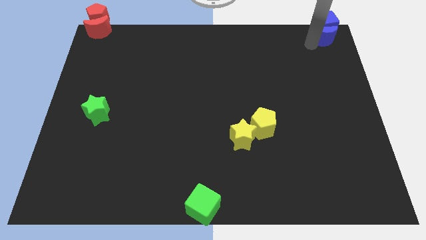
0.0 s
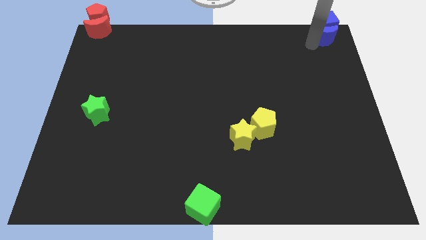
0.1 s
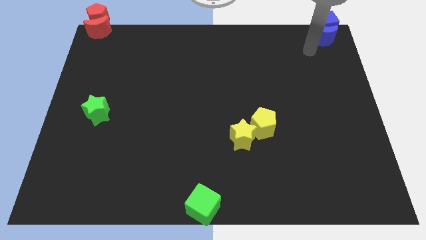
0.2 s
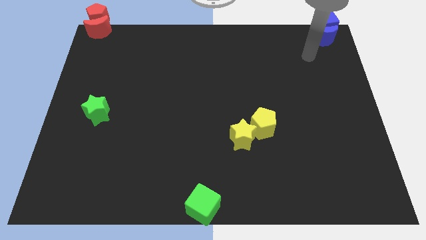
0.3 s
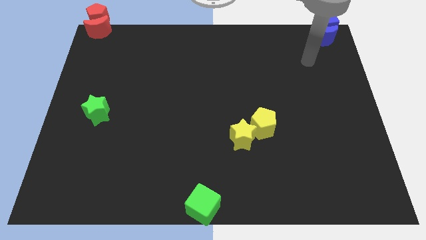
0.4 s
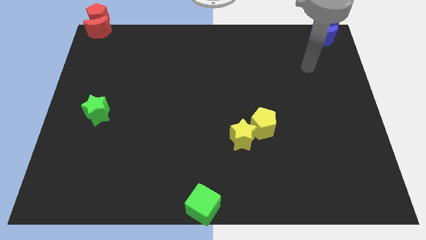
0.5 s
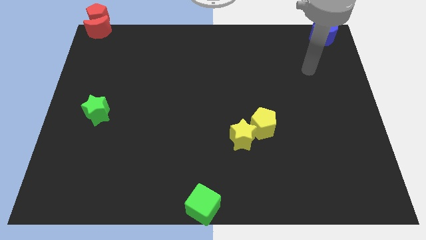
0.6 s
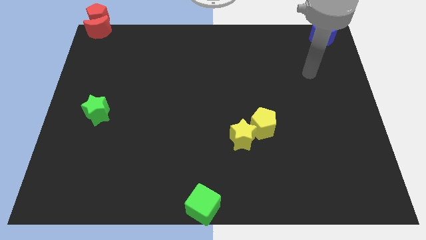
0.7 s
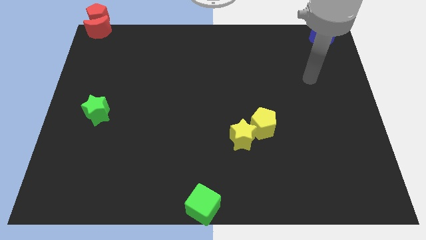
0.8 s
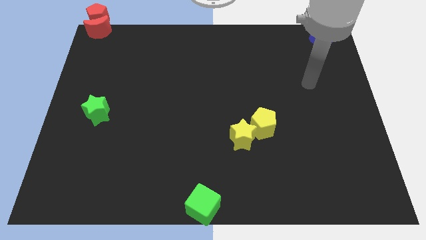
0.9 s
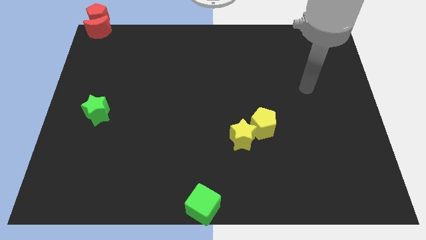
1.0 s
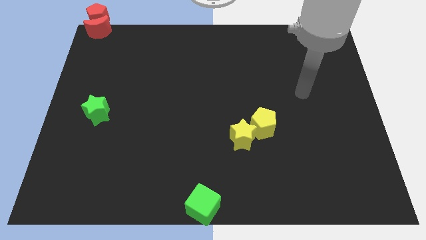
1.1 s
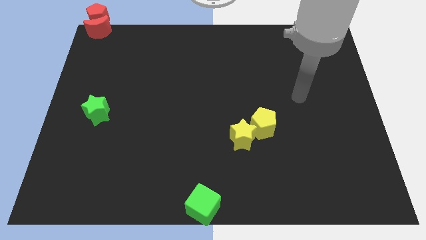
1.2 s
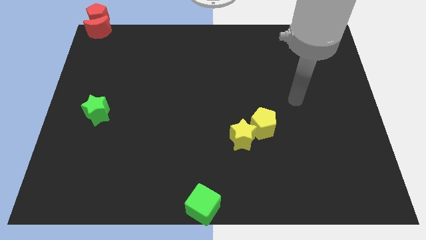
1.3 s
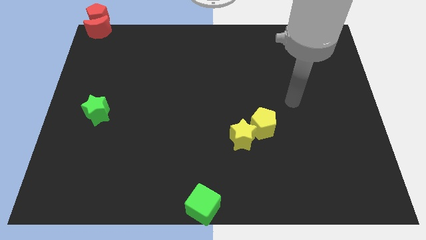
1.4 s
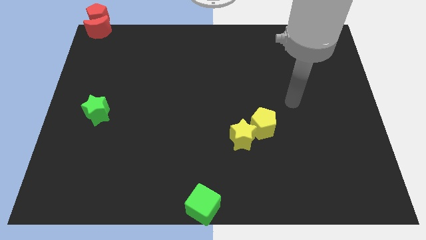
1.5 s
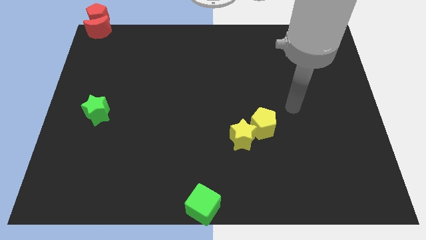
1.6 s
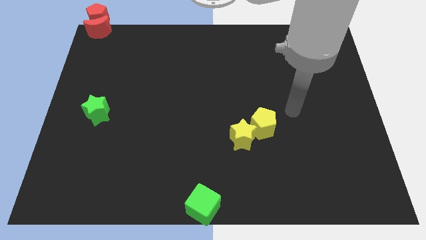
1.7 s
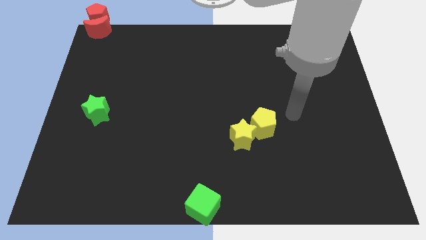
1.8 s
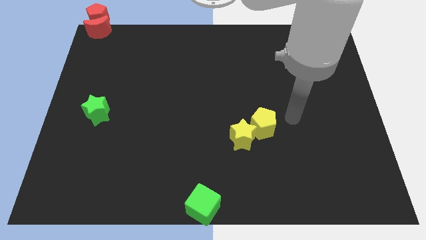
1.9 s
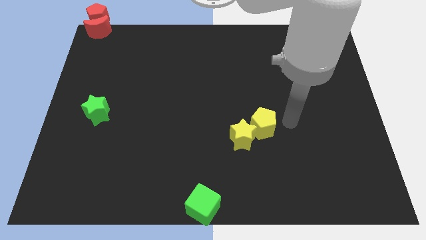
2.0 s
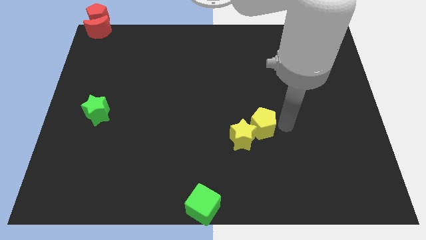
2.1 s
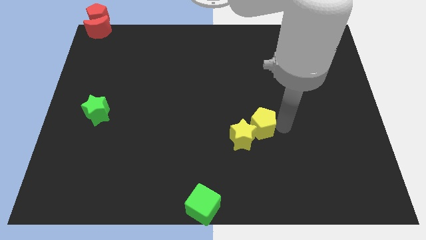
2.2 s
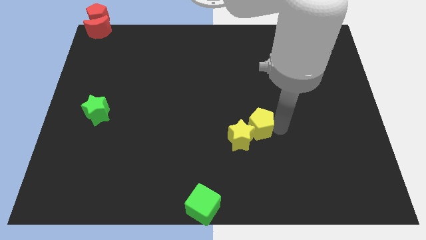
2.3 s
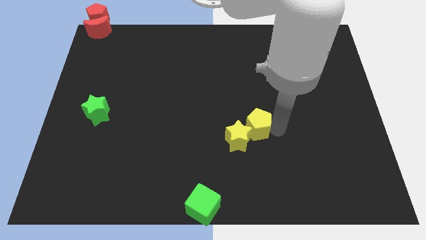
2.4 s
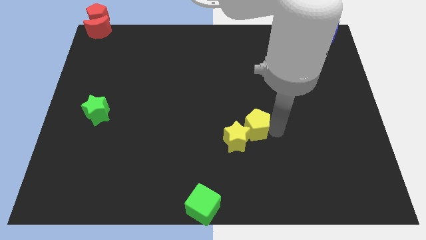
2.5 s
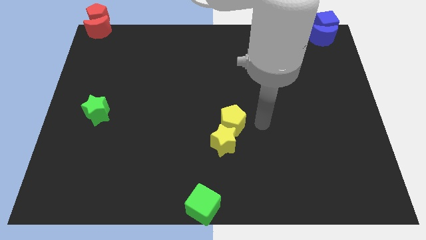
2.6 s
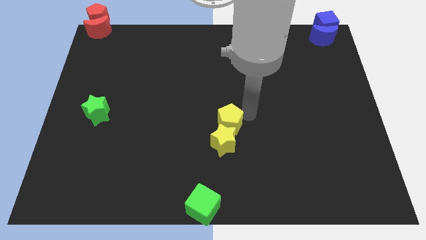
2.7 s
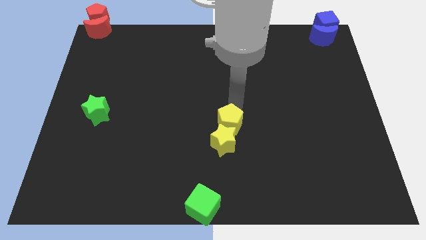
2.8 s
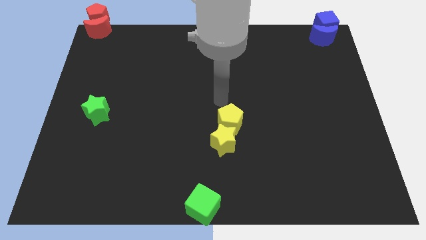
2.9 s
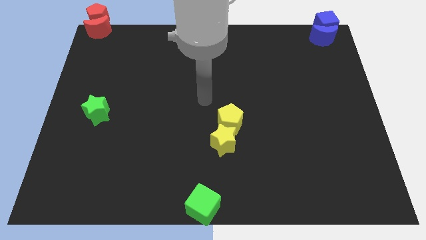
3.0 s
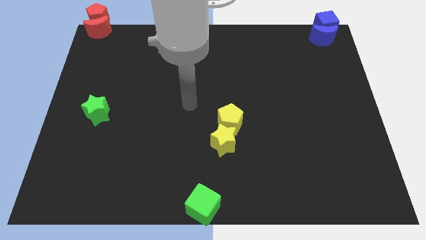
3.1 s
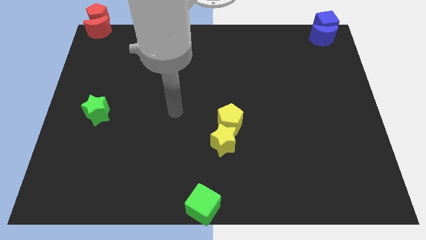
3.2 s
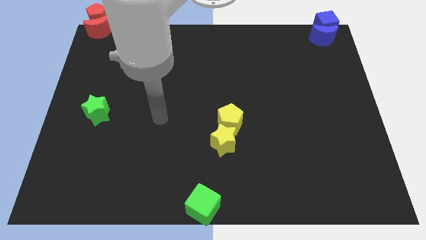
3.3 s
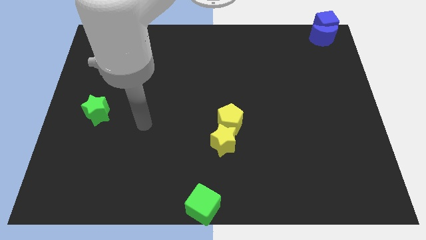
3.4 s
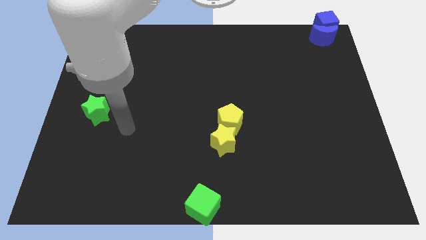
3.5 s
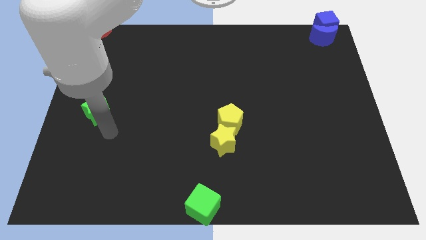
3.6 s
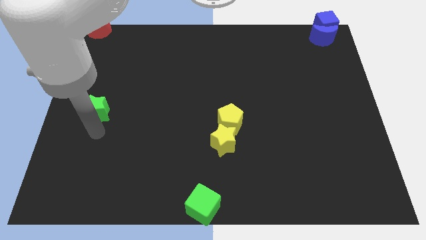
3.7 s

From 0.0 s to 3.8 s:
push the yellow blocks slightly downwards

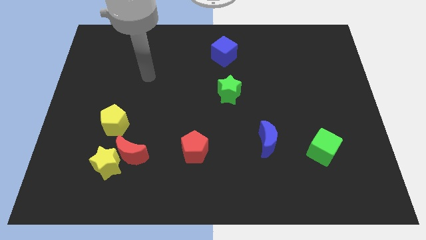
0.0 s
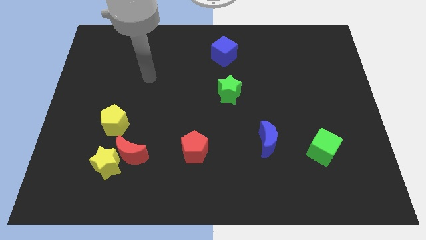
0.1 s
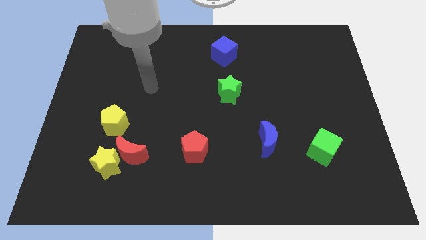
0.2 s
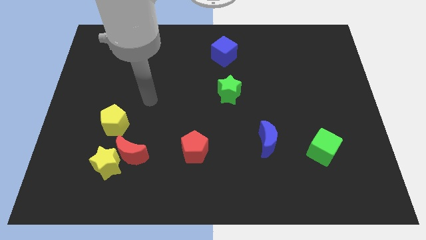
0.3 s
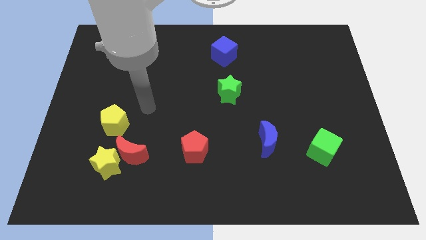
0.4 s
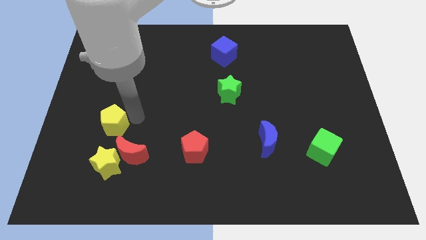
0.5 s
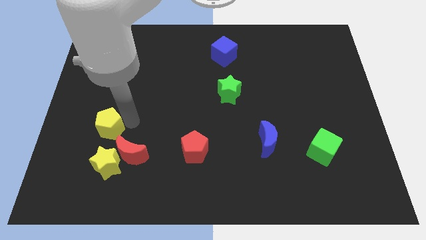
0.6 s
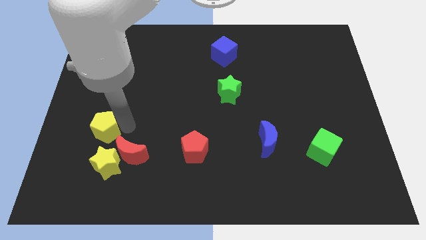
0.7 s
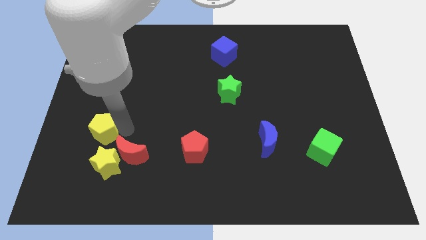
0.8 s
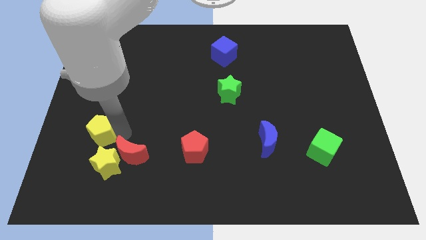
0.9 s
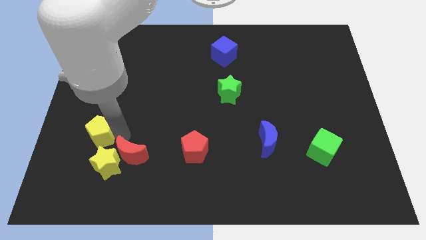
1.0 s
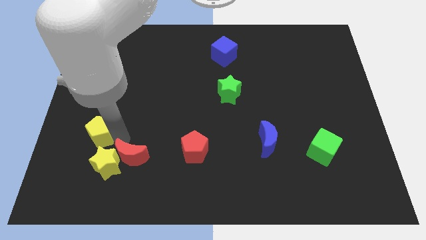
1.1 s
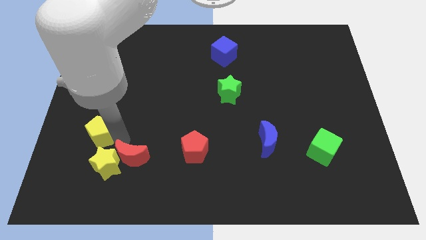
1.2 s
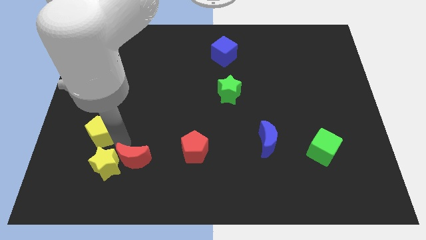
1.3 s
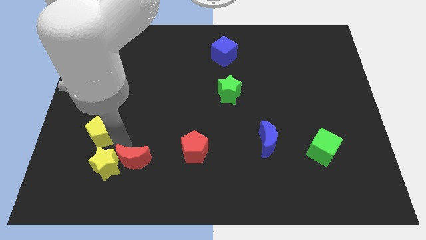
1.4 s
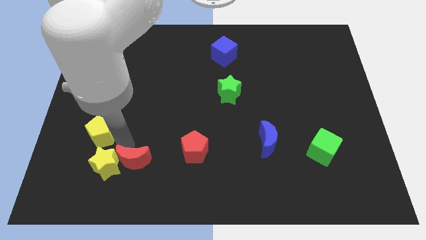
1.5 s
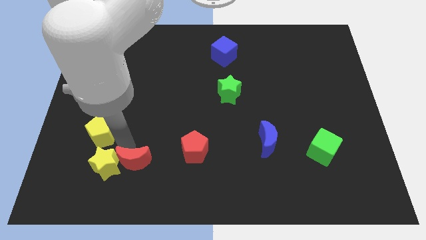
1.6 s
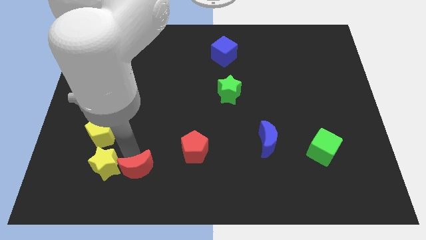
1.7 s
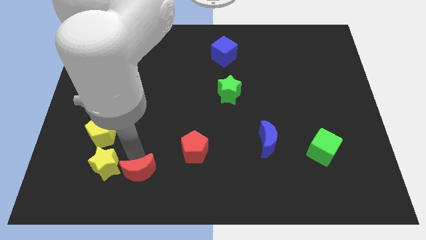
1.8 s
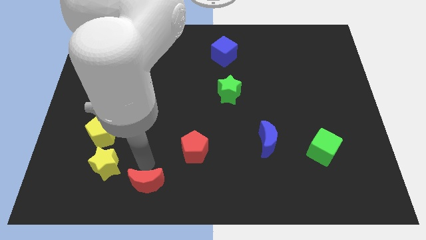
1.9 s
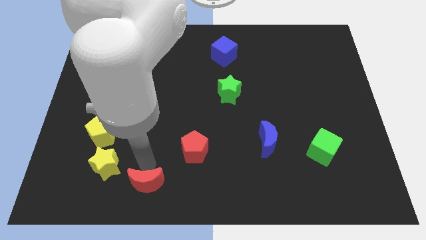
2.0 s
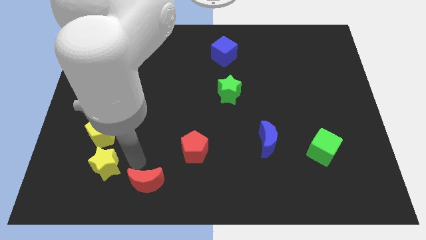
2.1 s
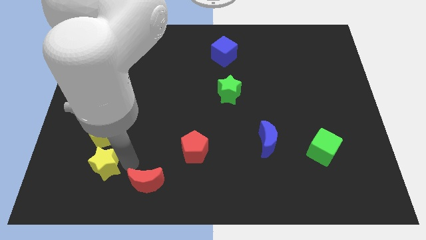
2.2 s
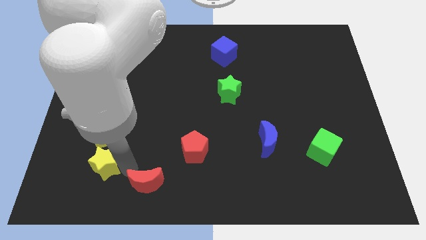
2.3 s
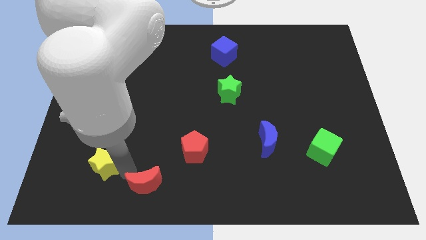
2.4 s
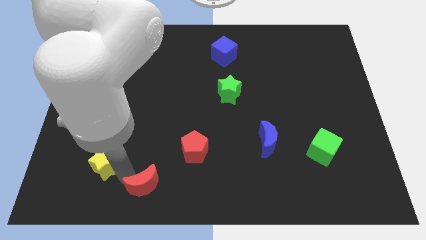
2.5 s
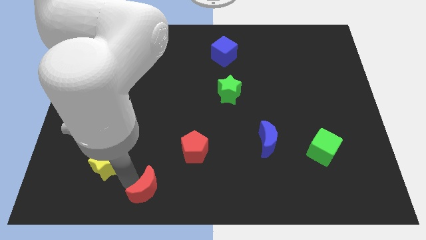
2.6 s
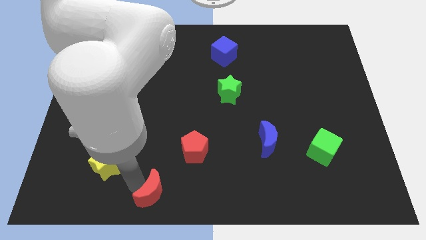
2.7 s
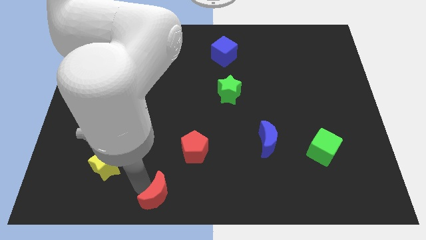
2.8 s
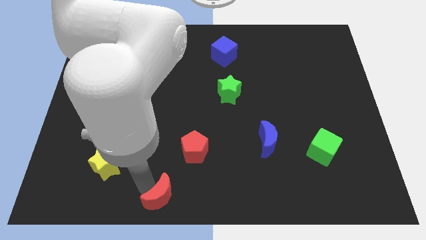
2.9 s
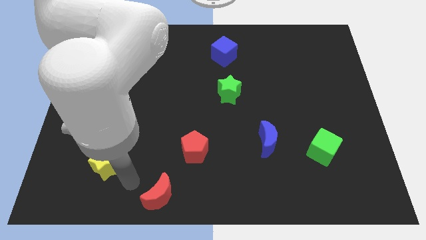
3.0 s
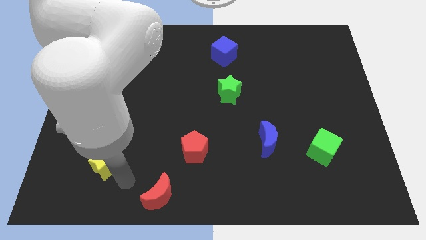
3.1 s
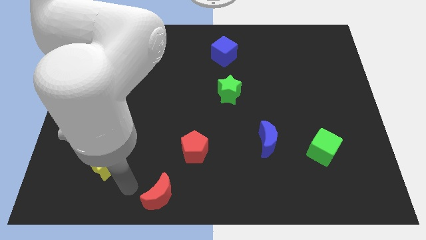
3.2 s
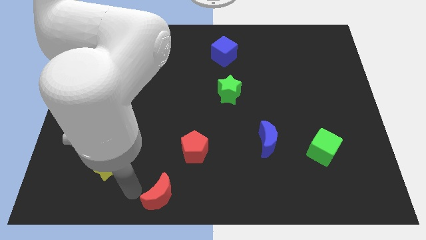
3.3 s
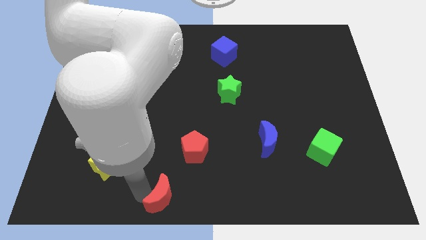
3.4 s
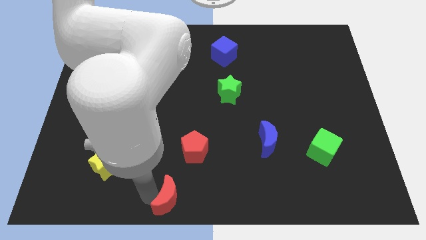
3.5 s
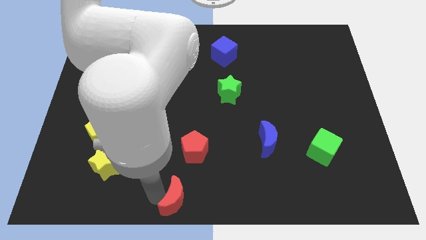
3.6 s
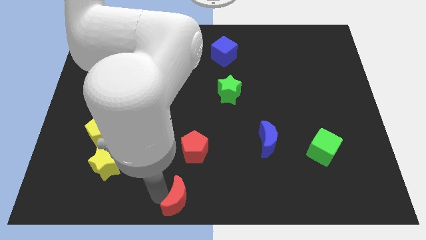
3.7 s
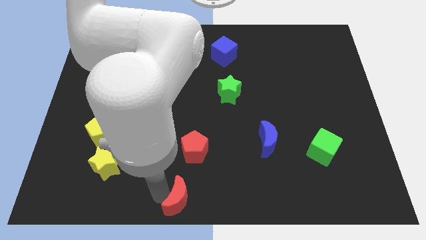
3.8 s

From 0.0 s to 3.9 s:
separate the red moon and yellow star by pushing the red moon towards the bottom center of the board

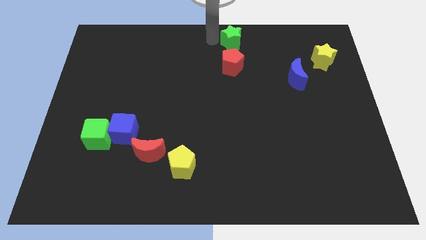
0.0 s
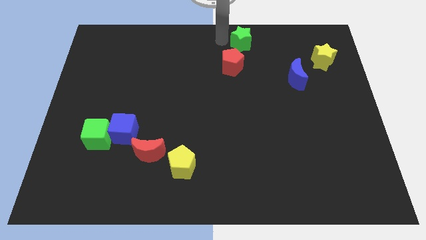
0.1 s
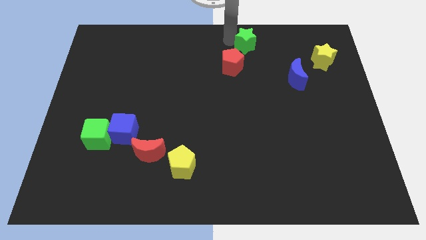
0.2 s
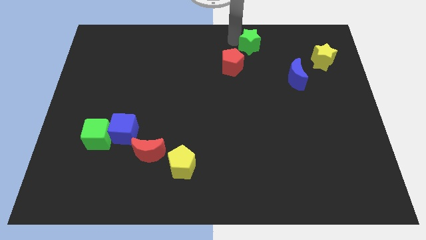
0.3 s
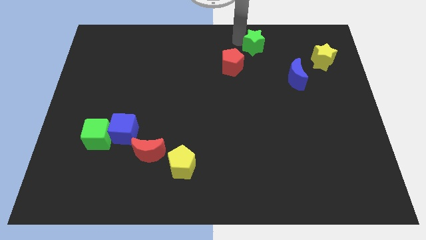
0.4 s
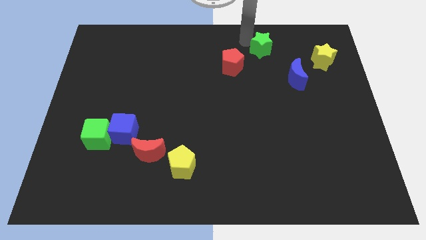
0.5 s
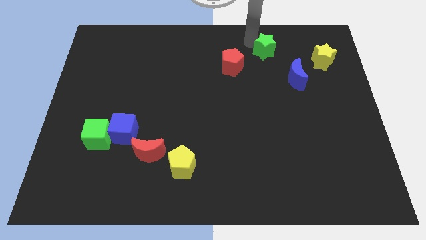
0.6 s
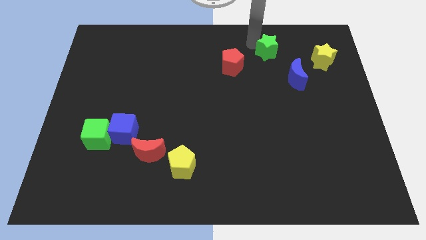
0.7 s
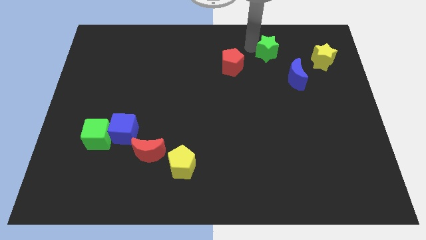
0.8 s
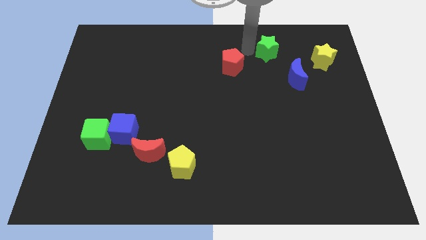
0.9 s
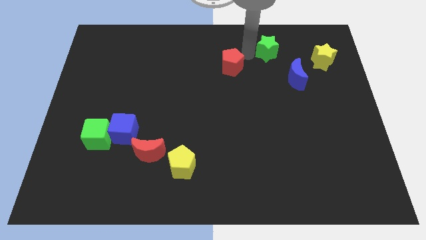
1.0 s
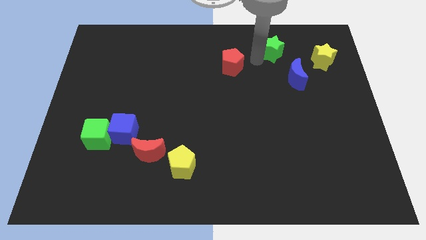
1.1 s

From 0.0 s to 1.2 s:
place the green star diagonally to red pentagon

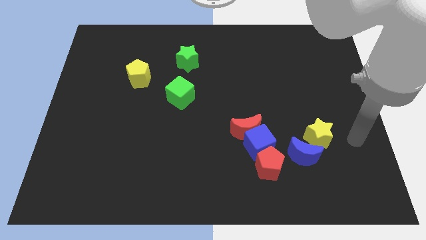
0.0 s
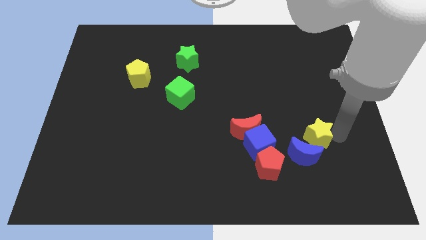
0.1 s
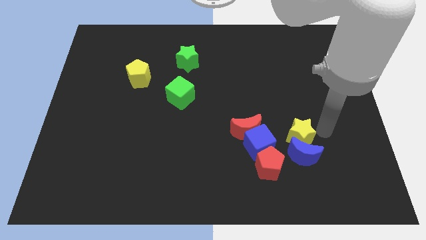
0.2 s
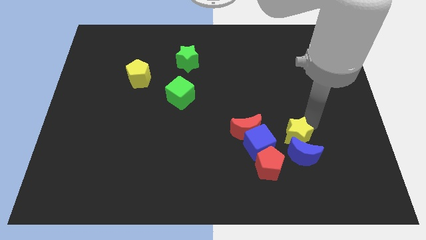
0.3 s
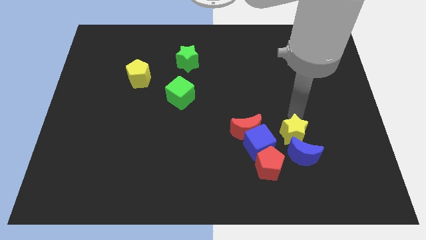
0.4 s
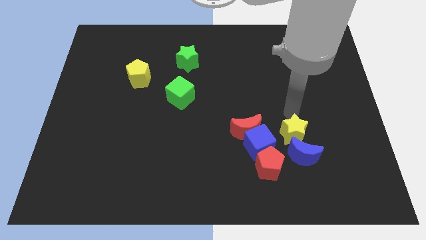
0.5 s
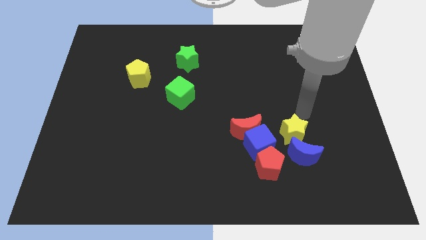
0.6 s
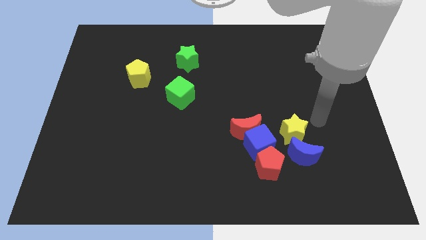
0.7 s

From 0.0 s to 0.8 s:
move the yellow star to the right of the blue cube
